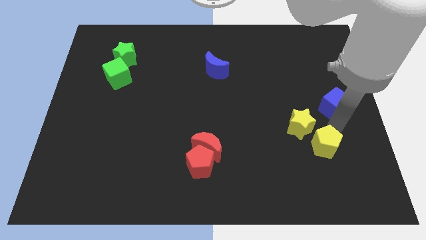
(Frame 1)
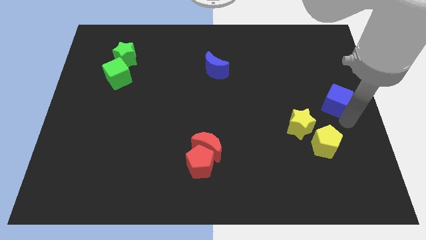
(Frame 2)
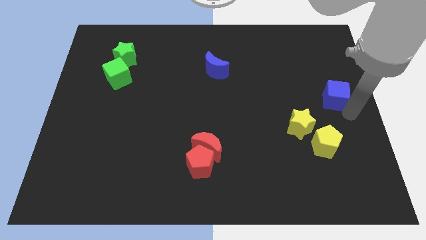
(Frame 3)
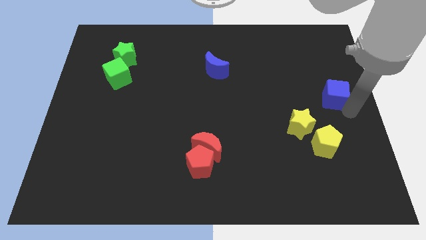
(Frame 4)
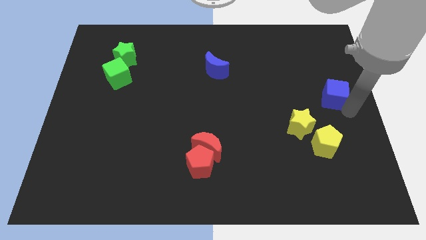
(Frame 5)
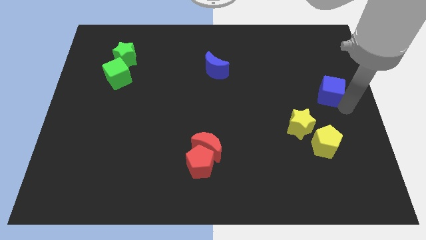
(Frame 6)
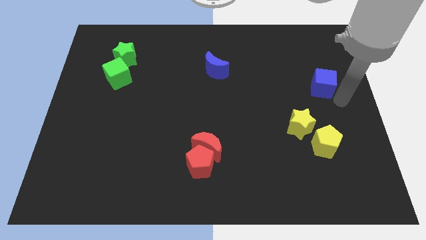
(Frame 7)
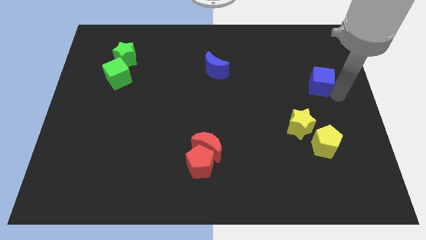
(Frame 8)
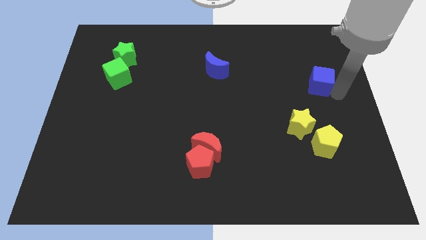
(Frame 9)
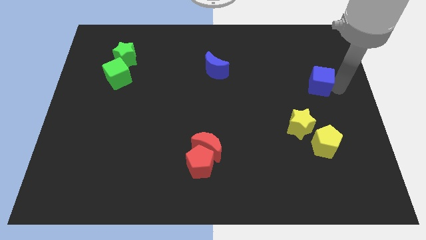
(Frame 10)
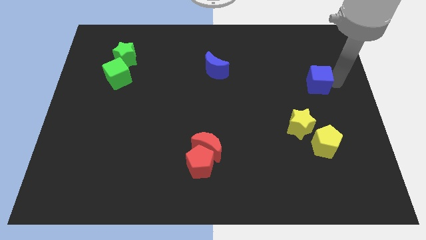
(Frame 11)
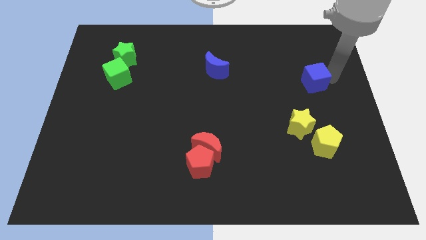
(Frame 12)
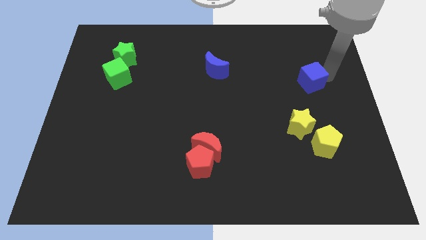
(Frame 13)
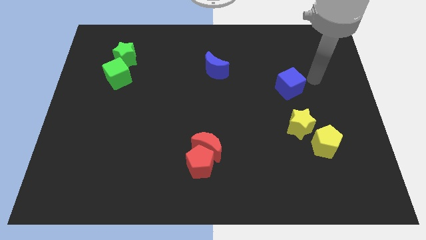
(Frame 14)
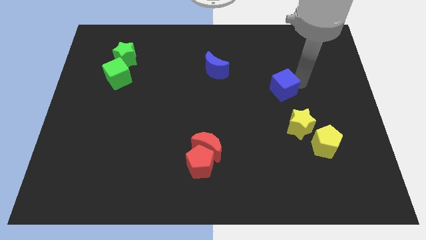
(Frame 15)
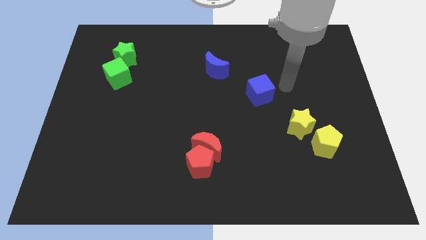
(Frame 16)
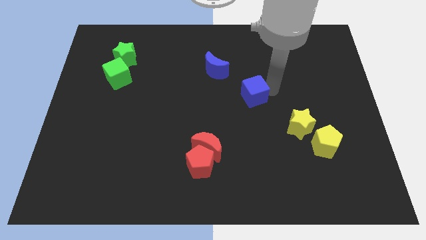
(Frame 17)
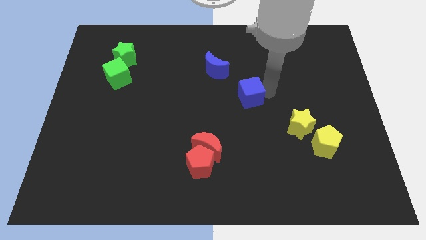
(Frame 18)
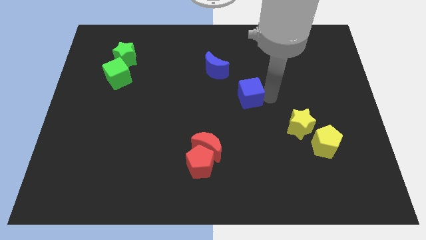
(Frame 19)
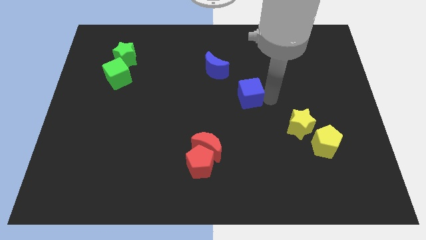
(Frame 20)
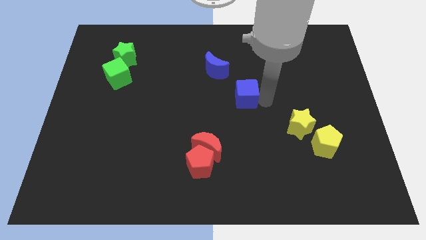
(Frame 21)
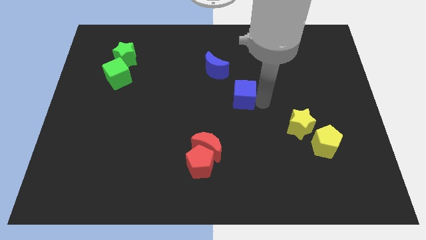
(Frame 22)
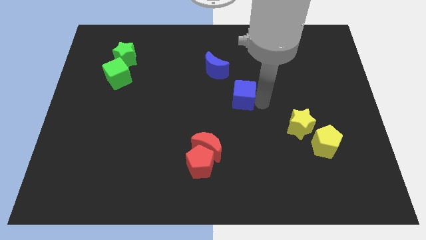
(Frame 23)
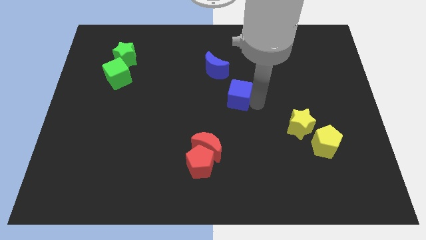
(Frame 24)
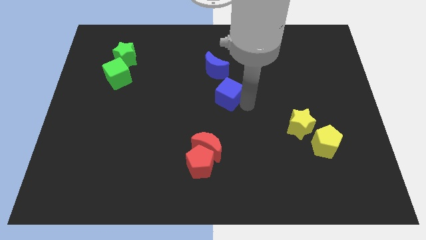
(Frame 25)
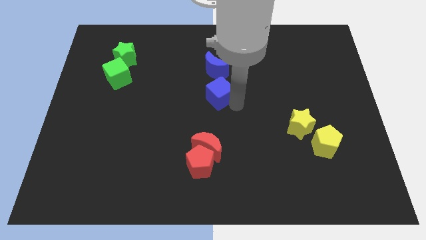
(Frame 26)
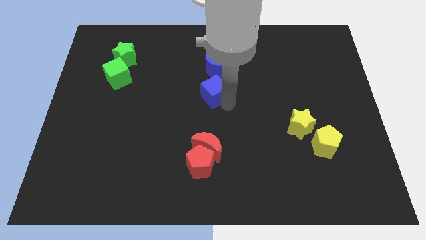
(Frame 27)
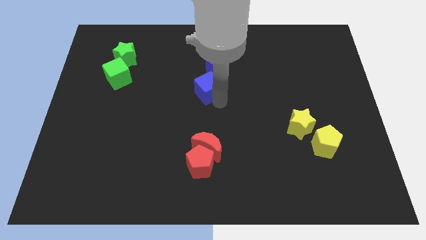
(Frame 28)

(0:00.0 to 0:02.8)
place the blue cube down to the blue moon

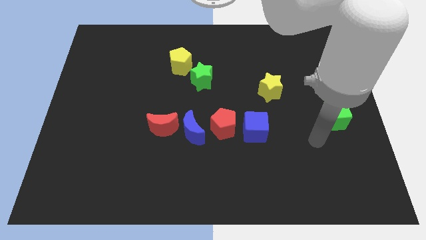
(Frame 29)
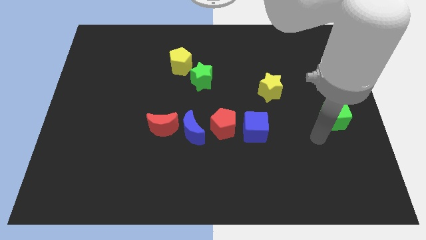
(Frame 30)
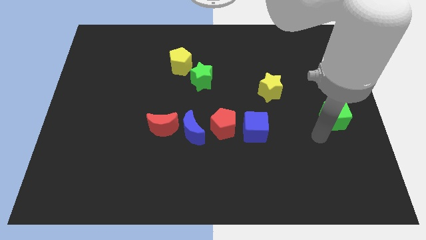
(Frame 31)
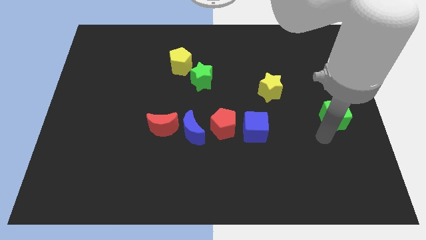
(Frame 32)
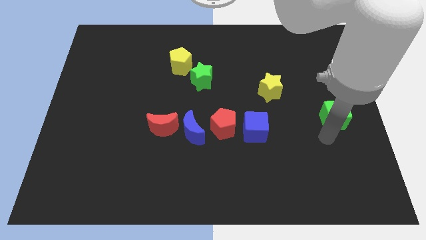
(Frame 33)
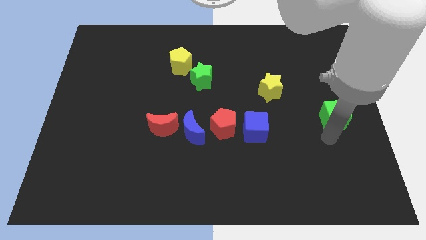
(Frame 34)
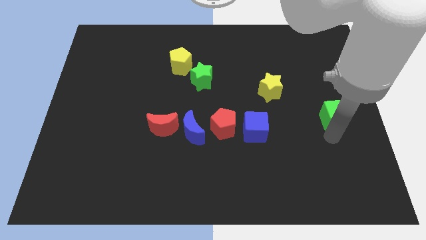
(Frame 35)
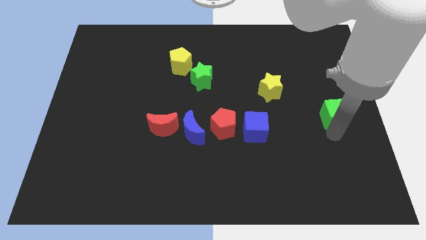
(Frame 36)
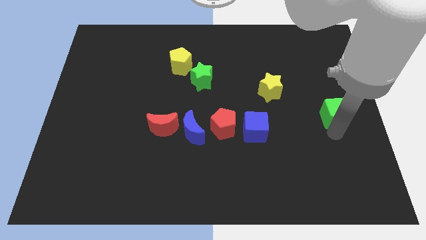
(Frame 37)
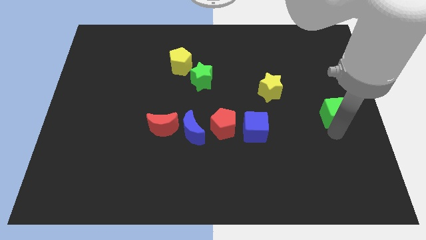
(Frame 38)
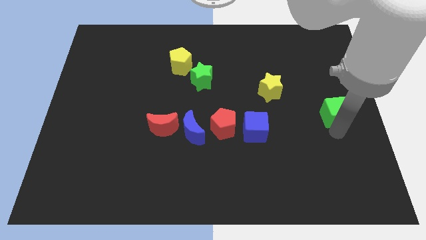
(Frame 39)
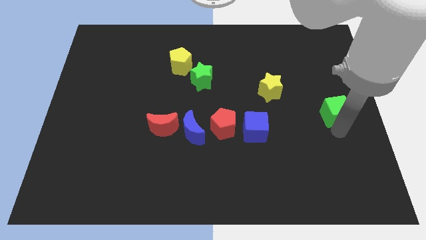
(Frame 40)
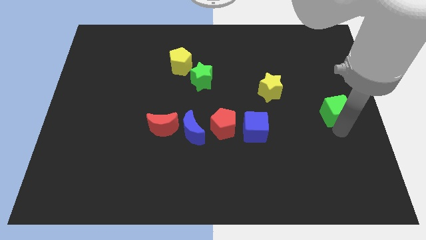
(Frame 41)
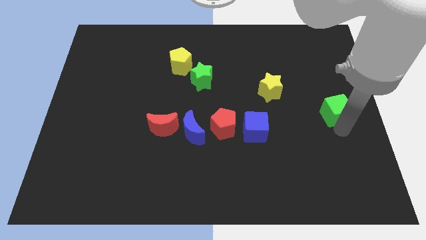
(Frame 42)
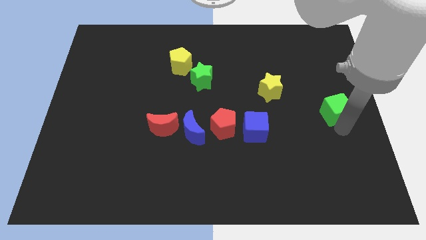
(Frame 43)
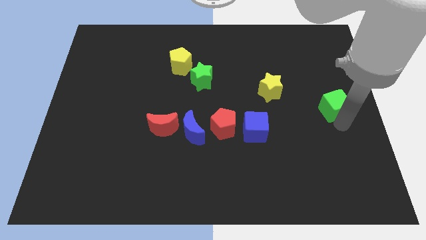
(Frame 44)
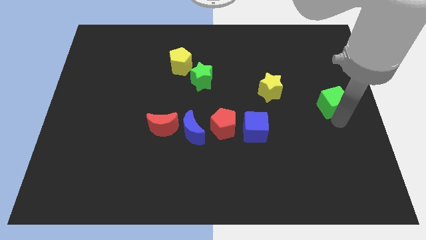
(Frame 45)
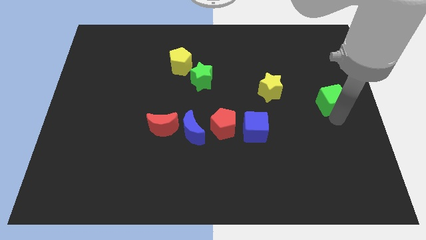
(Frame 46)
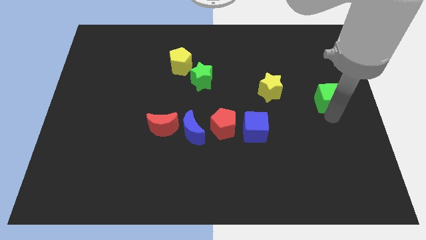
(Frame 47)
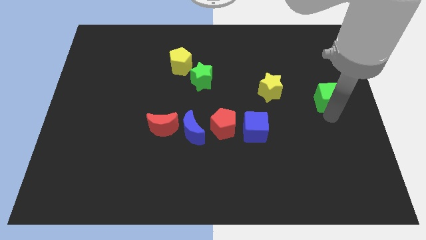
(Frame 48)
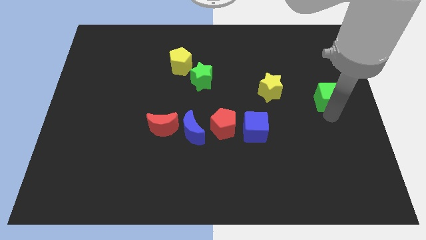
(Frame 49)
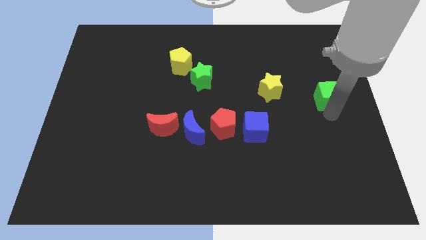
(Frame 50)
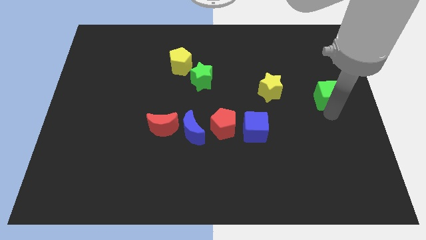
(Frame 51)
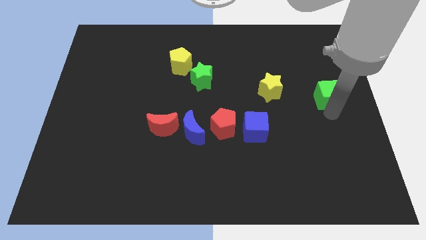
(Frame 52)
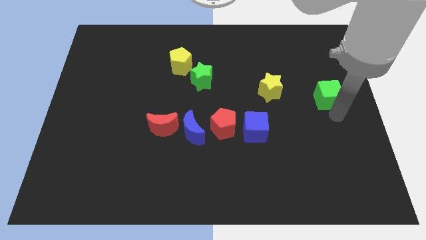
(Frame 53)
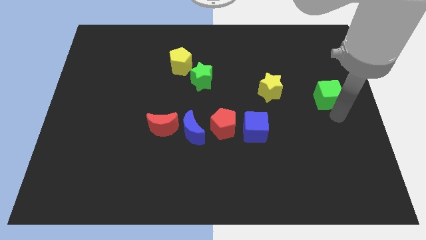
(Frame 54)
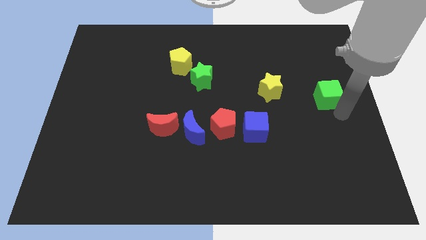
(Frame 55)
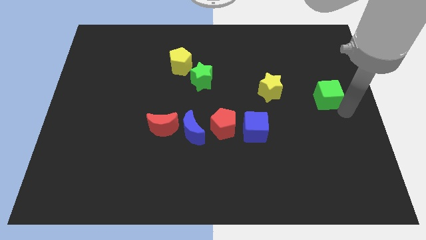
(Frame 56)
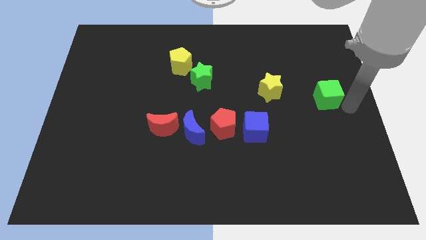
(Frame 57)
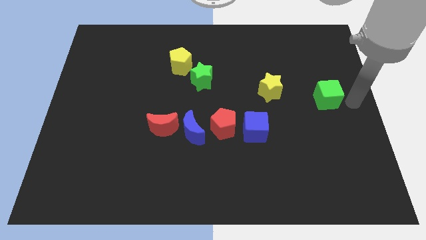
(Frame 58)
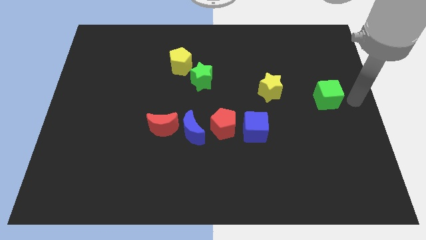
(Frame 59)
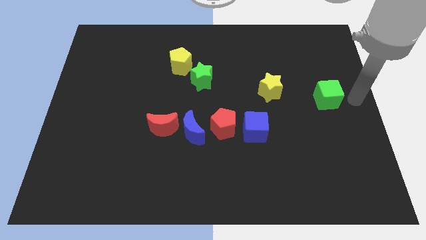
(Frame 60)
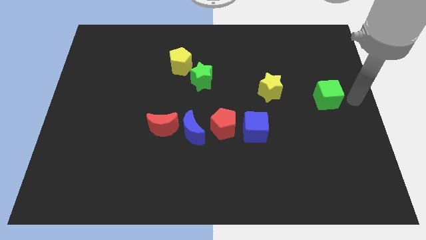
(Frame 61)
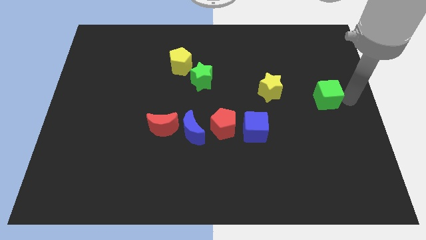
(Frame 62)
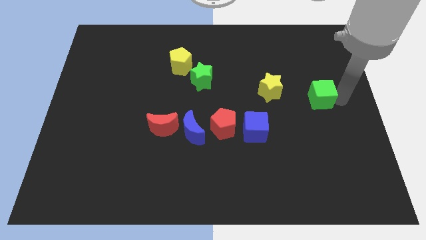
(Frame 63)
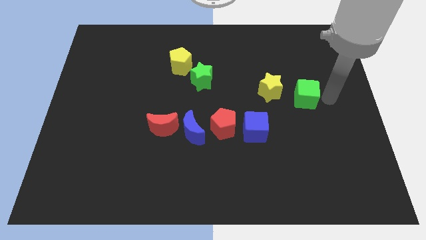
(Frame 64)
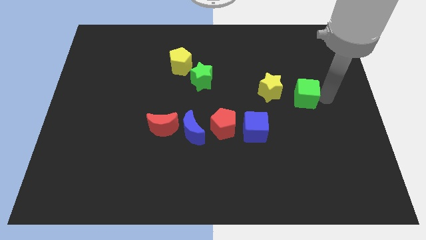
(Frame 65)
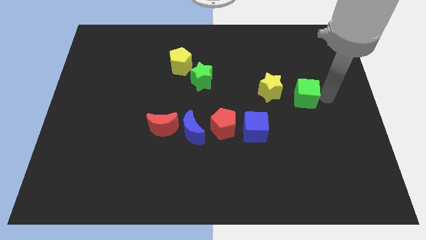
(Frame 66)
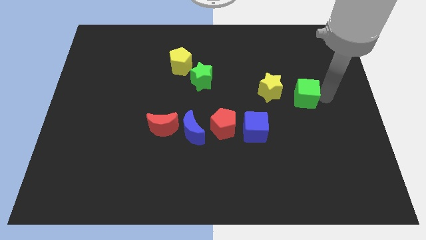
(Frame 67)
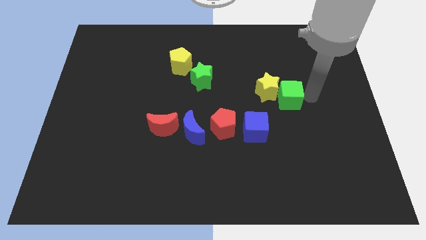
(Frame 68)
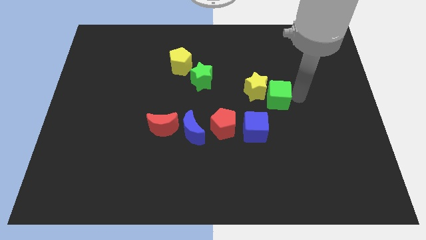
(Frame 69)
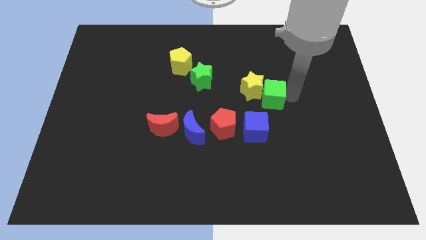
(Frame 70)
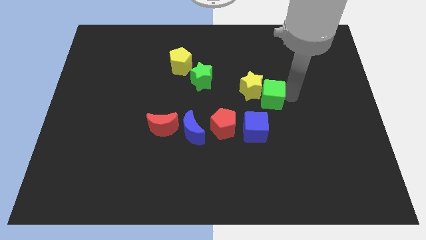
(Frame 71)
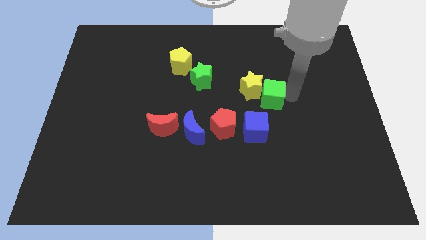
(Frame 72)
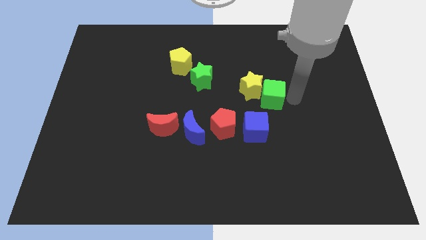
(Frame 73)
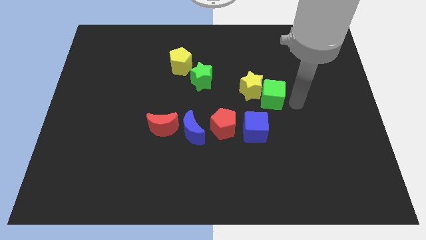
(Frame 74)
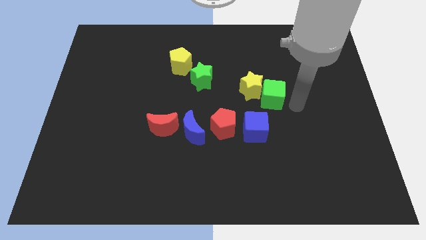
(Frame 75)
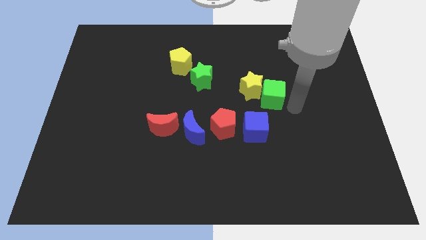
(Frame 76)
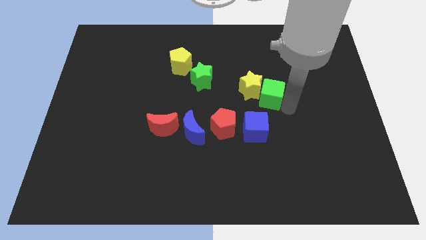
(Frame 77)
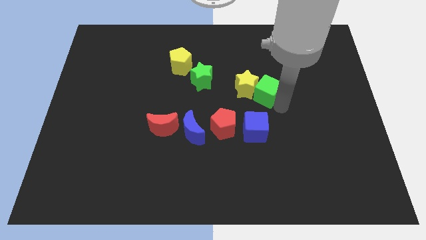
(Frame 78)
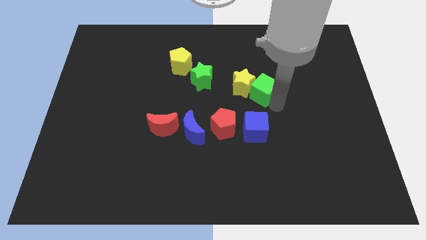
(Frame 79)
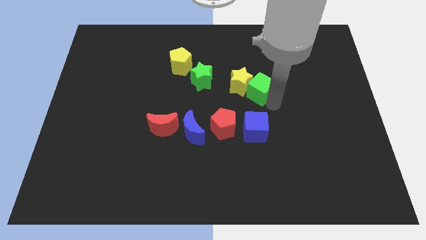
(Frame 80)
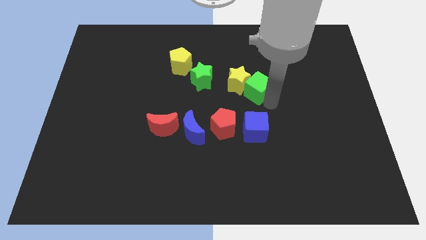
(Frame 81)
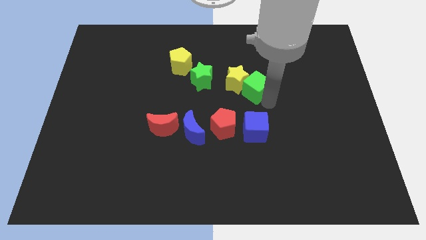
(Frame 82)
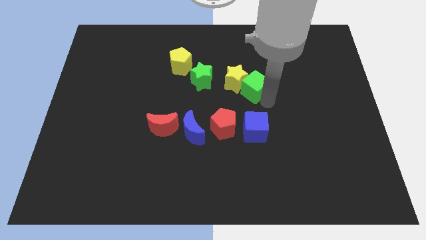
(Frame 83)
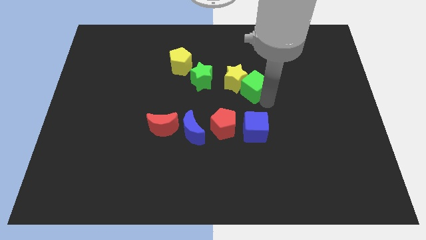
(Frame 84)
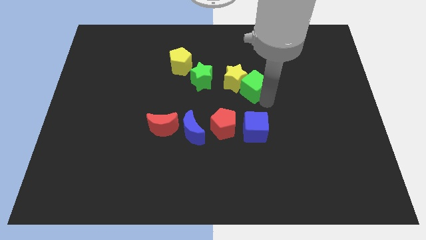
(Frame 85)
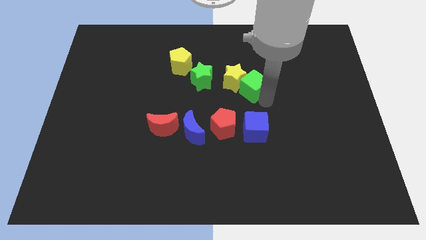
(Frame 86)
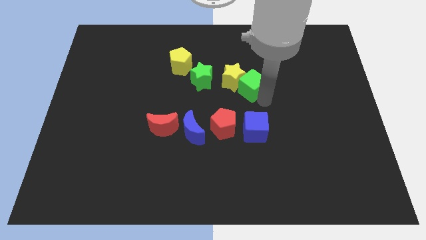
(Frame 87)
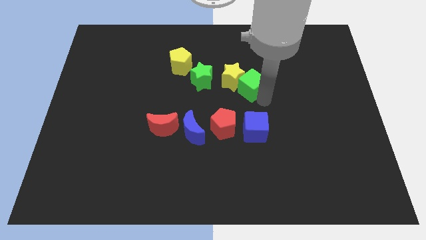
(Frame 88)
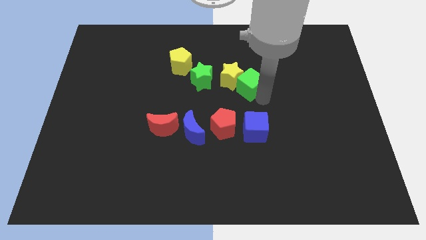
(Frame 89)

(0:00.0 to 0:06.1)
push the yellow star with the green cube
